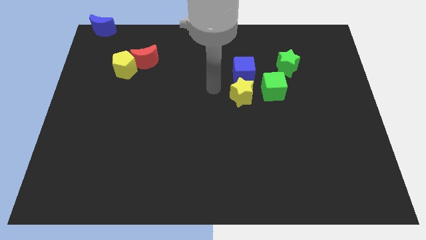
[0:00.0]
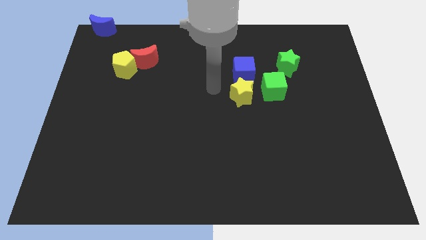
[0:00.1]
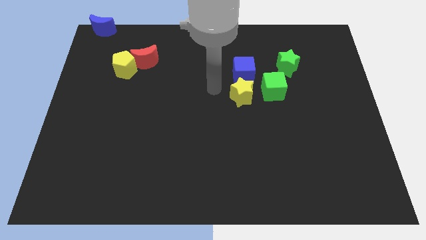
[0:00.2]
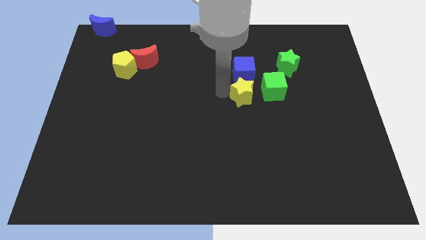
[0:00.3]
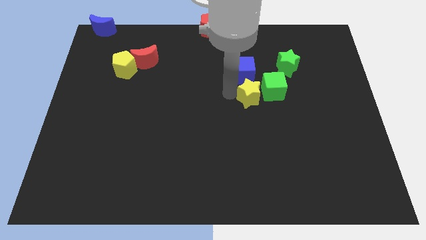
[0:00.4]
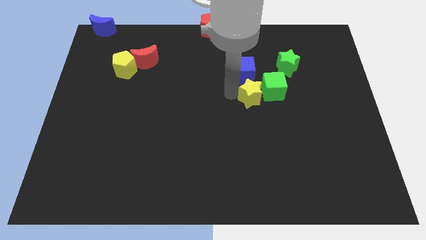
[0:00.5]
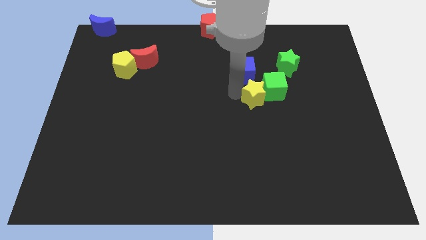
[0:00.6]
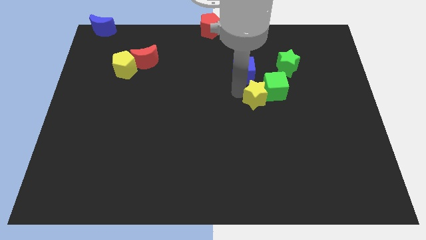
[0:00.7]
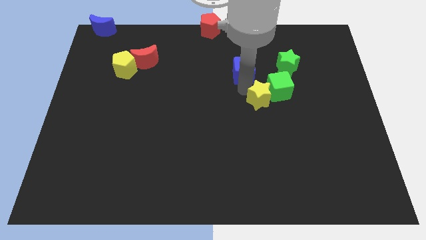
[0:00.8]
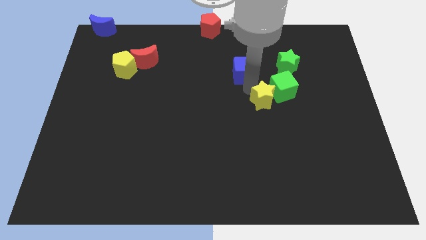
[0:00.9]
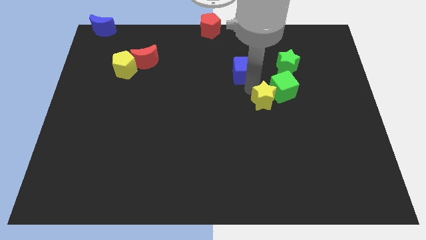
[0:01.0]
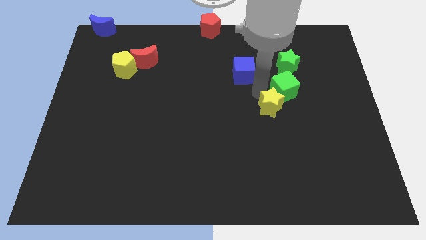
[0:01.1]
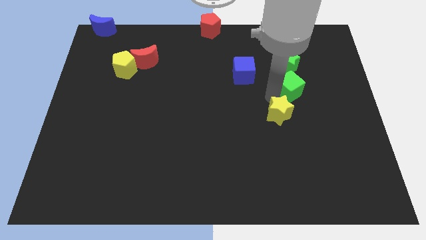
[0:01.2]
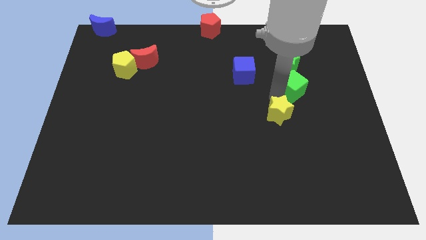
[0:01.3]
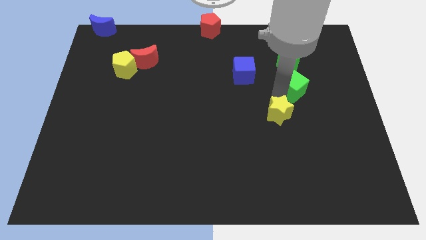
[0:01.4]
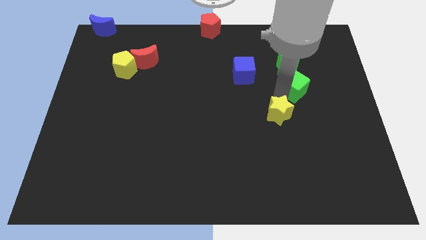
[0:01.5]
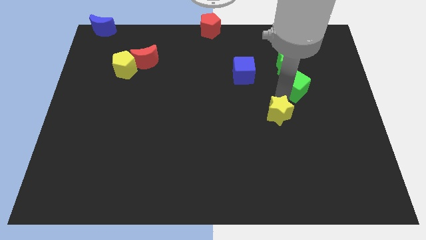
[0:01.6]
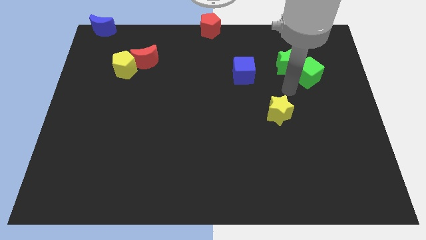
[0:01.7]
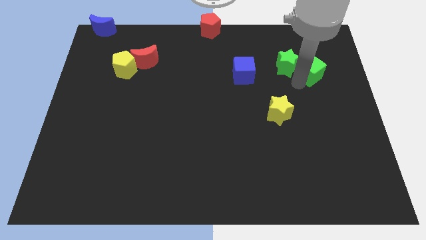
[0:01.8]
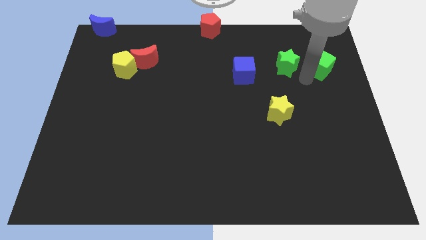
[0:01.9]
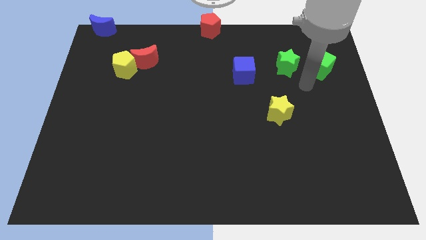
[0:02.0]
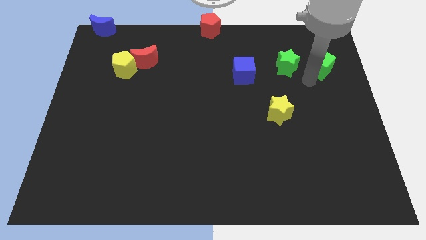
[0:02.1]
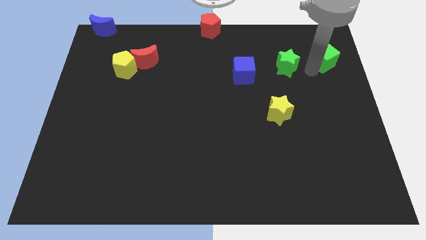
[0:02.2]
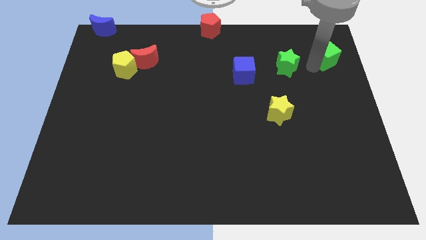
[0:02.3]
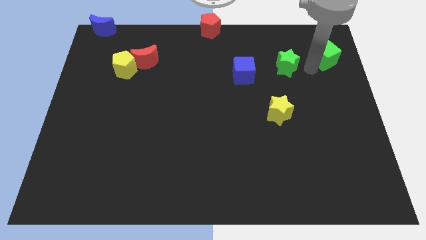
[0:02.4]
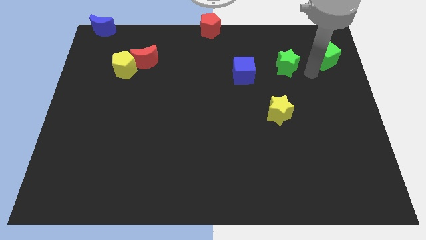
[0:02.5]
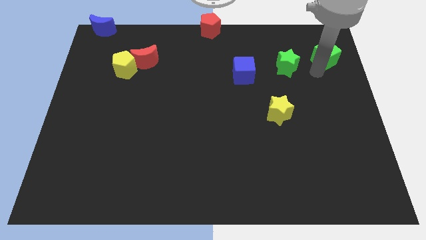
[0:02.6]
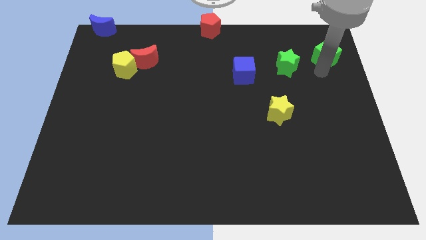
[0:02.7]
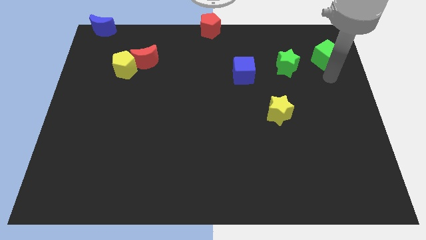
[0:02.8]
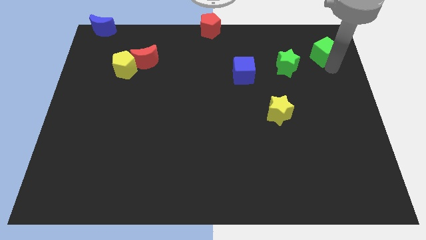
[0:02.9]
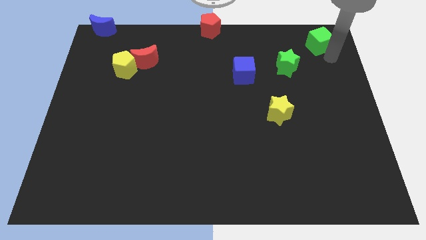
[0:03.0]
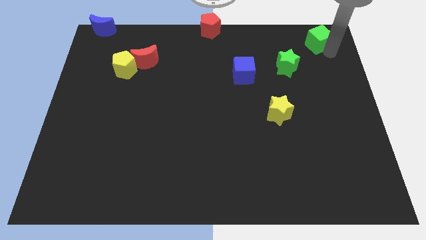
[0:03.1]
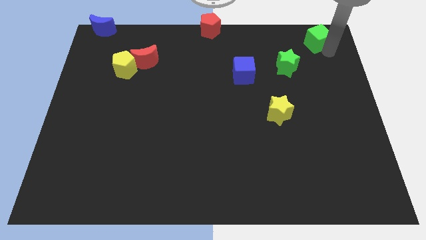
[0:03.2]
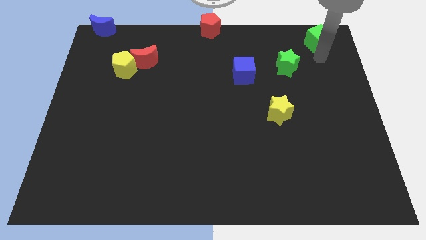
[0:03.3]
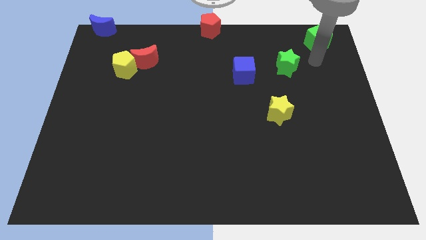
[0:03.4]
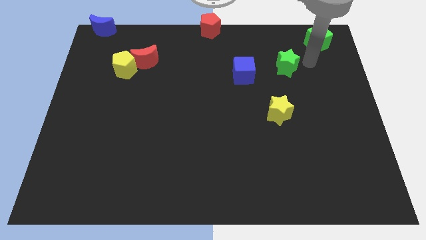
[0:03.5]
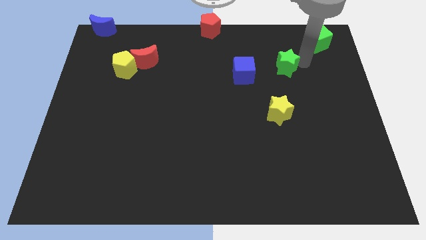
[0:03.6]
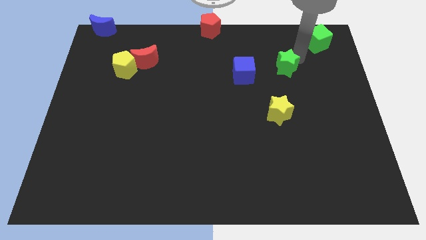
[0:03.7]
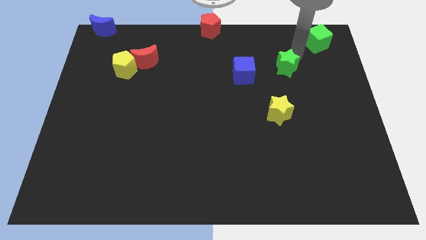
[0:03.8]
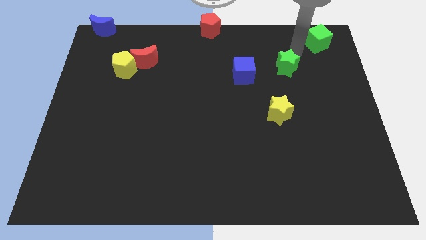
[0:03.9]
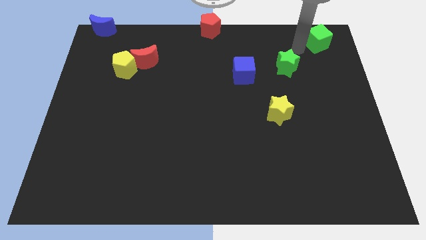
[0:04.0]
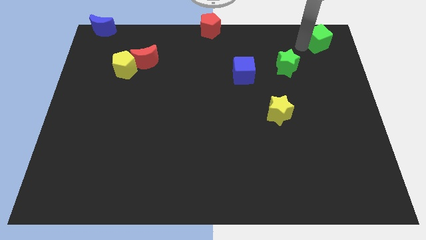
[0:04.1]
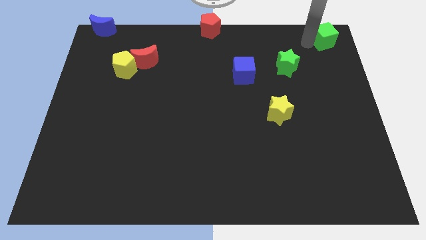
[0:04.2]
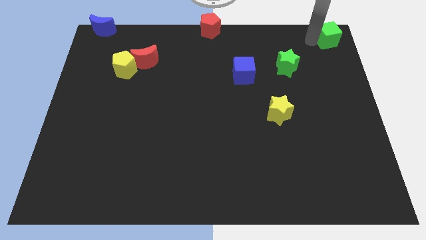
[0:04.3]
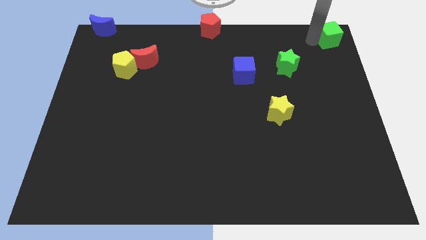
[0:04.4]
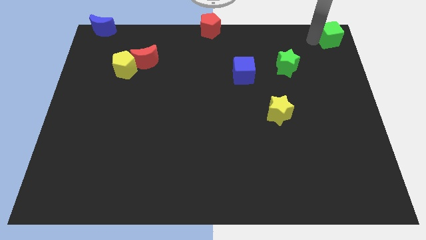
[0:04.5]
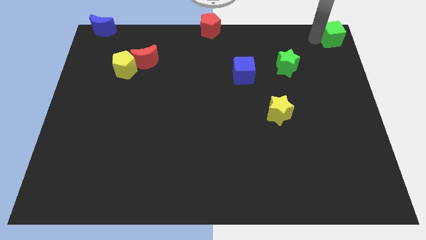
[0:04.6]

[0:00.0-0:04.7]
push the green cube and the yellow star away from the blue cube

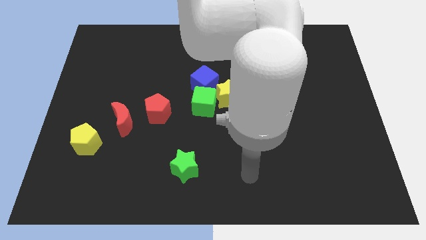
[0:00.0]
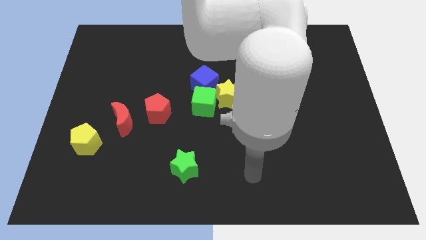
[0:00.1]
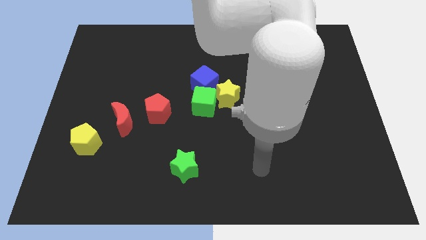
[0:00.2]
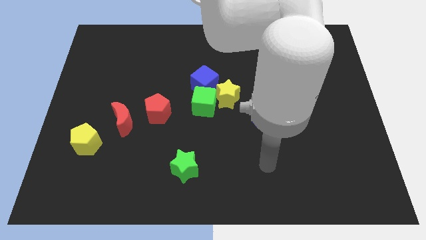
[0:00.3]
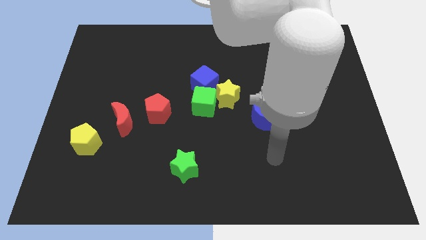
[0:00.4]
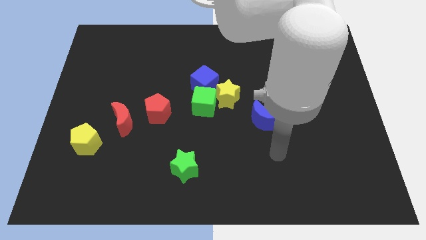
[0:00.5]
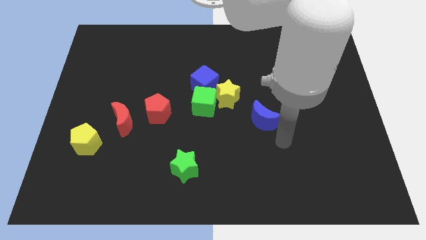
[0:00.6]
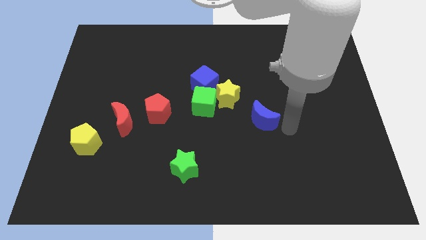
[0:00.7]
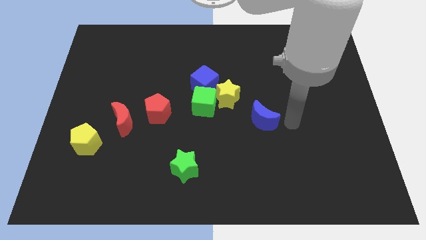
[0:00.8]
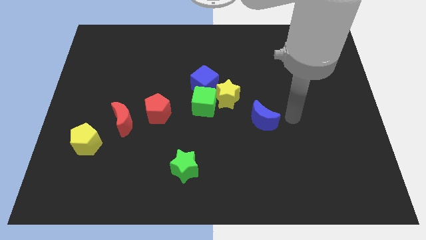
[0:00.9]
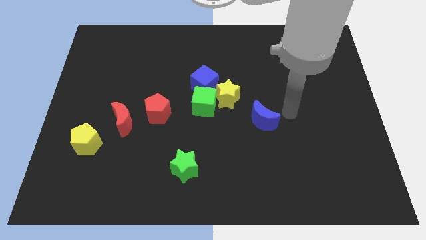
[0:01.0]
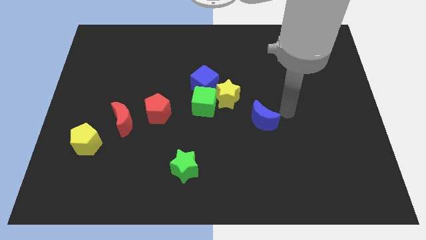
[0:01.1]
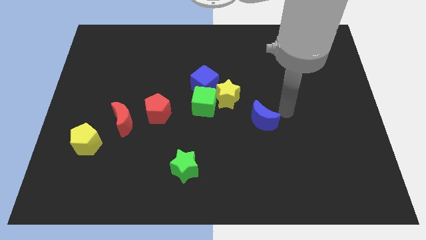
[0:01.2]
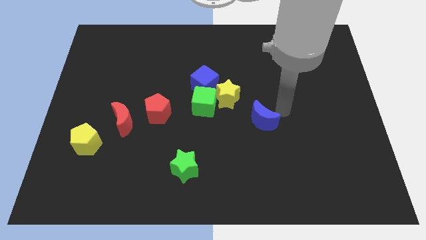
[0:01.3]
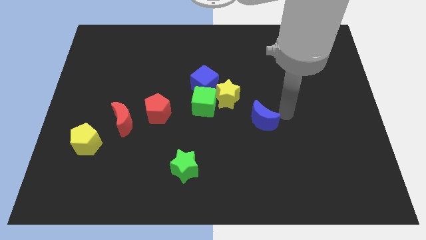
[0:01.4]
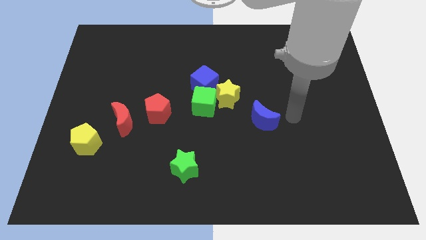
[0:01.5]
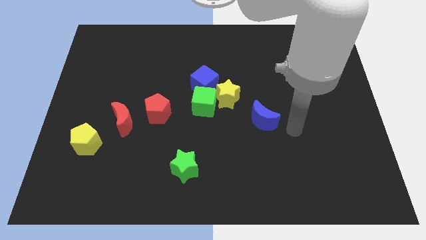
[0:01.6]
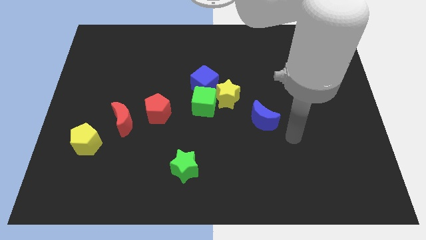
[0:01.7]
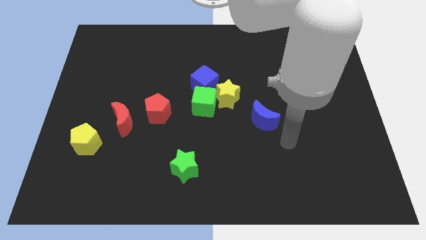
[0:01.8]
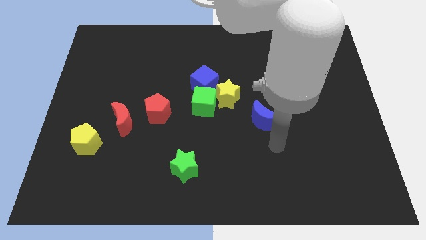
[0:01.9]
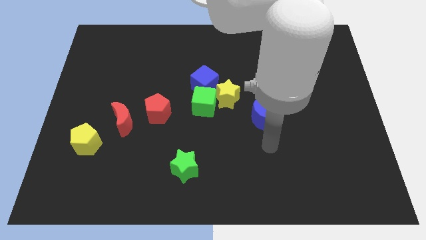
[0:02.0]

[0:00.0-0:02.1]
move your arm to the bottom of the blue crescent

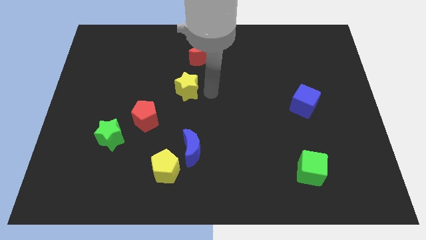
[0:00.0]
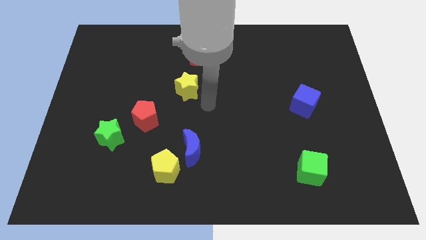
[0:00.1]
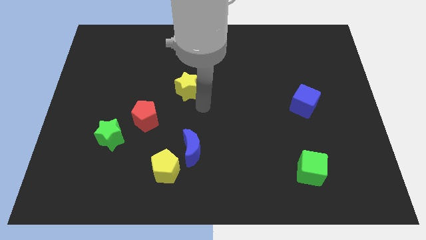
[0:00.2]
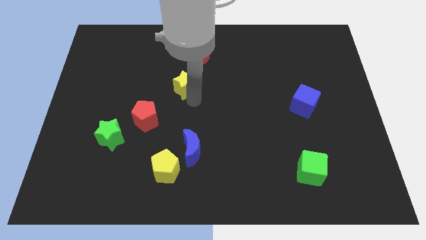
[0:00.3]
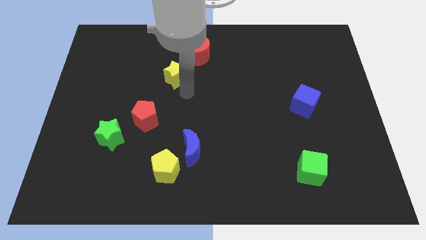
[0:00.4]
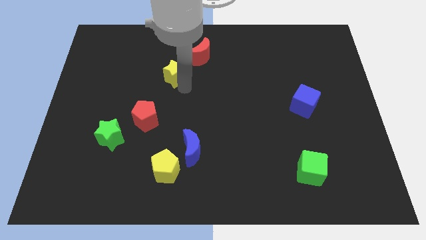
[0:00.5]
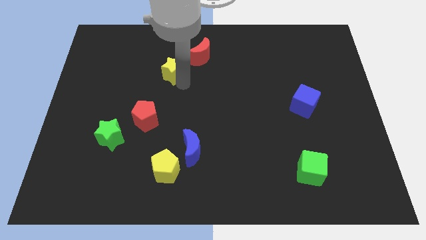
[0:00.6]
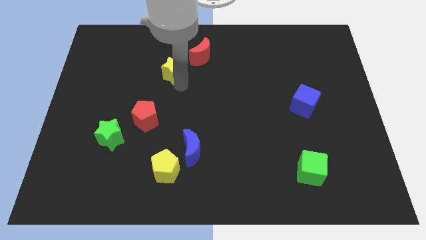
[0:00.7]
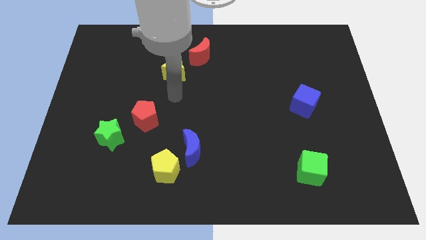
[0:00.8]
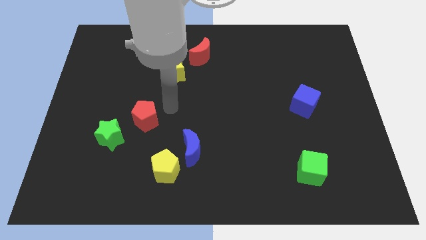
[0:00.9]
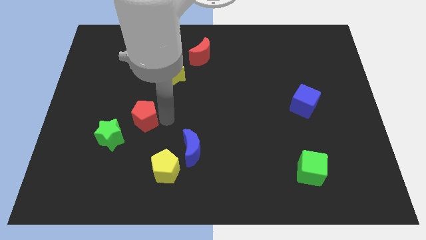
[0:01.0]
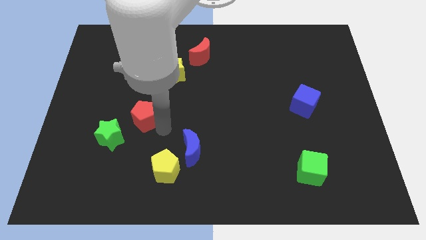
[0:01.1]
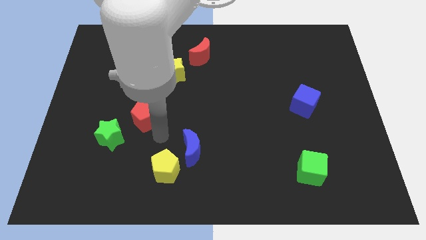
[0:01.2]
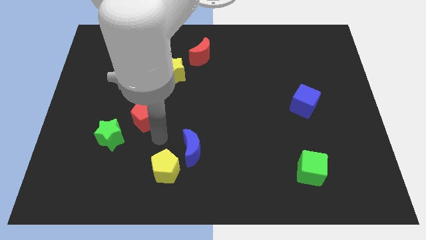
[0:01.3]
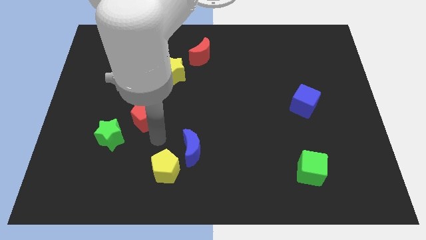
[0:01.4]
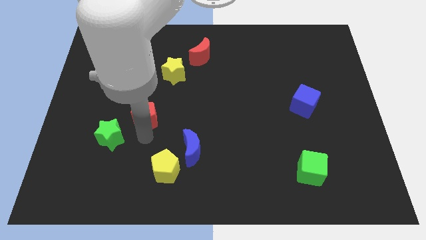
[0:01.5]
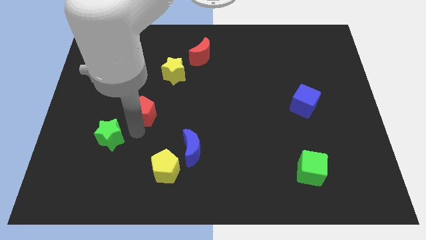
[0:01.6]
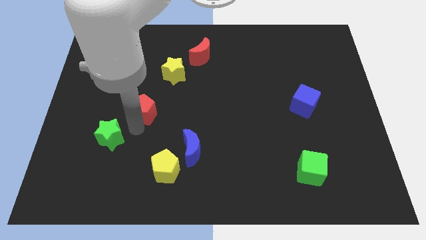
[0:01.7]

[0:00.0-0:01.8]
place the yellow star towards the bottom left side of the red crescent

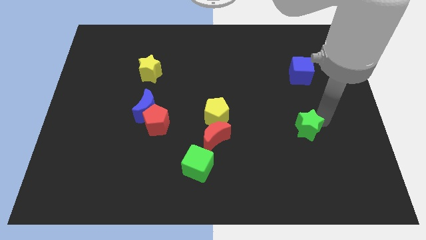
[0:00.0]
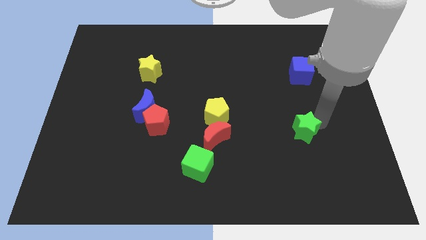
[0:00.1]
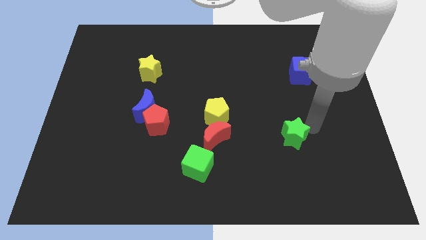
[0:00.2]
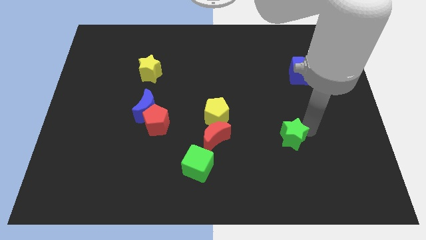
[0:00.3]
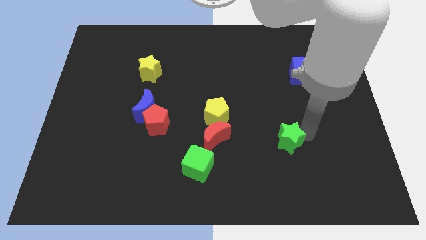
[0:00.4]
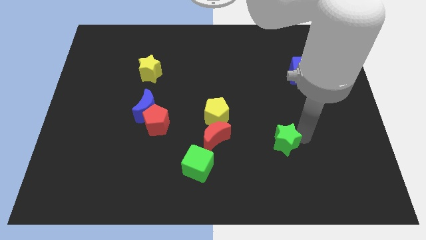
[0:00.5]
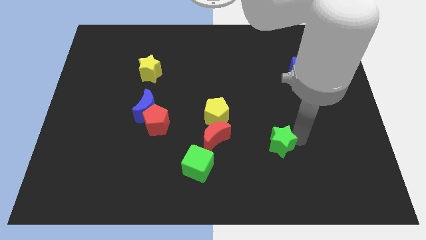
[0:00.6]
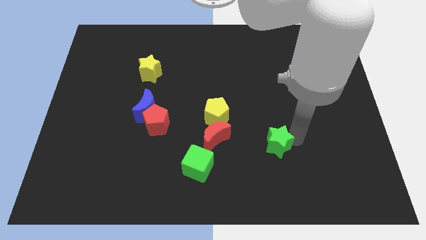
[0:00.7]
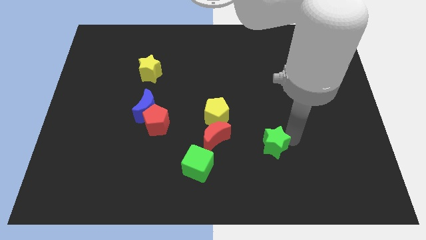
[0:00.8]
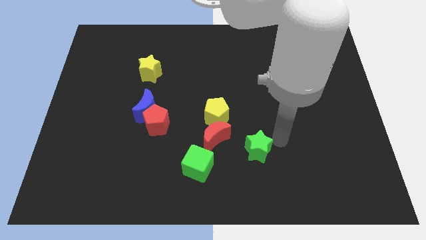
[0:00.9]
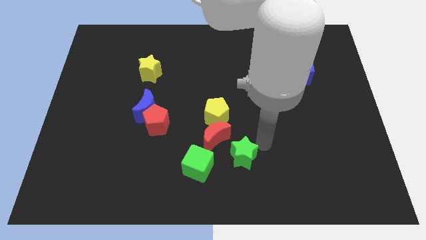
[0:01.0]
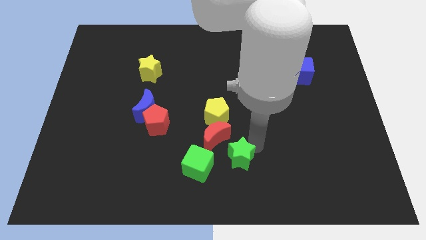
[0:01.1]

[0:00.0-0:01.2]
slide the green star diagonally bottom left to the blue cube
